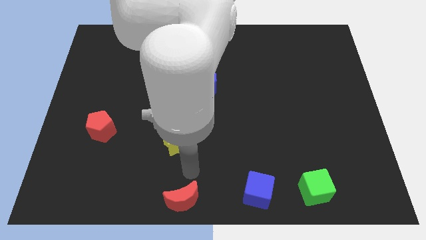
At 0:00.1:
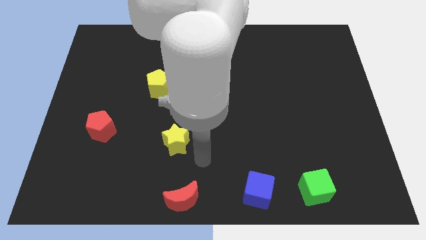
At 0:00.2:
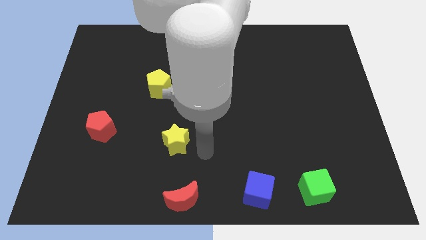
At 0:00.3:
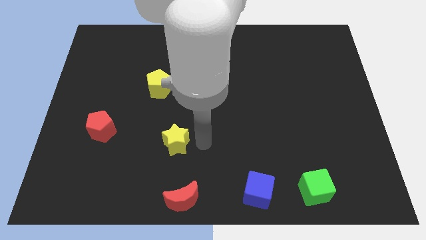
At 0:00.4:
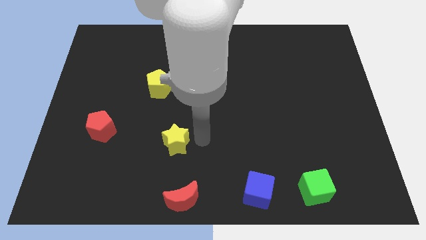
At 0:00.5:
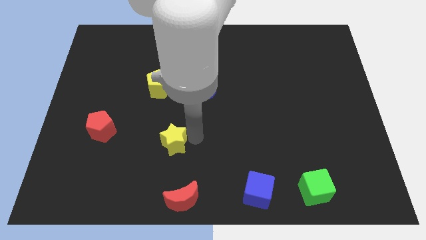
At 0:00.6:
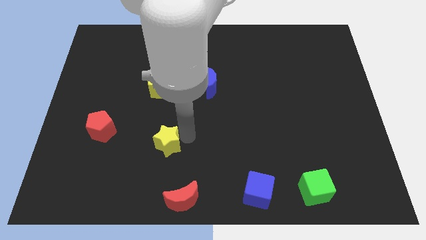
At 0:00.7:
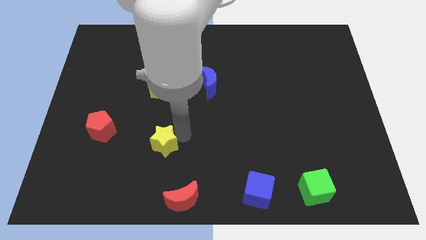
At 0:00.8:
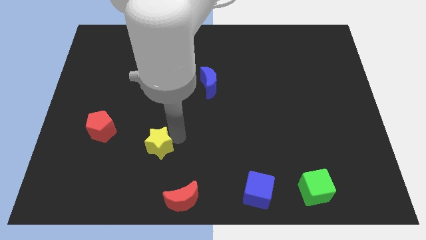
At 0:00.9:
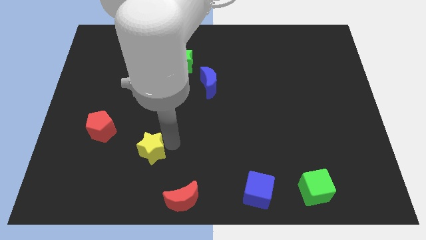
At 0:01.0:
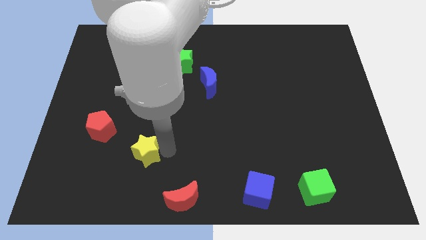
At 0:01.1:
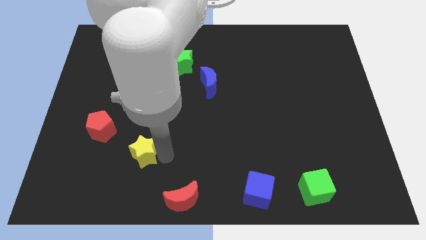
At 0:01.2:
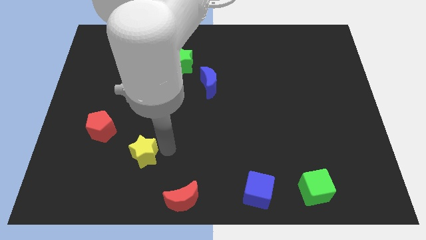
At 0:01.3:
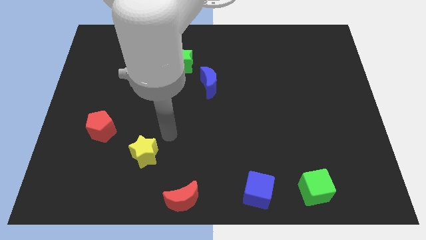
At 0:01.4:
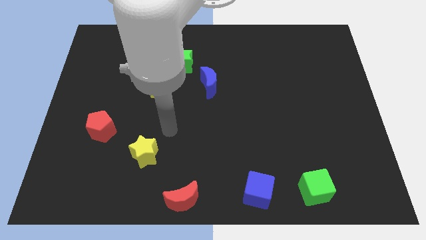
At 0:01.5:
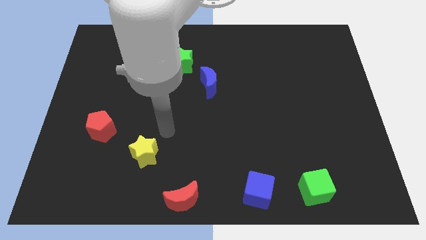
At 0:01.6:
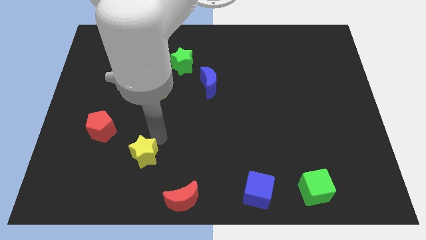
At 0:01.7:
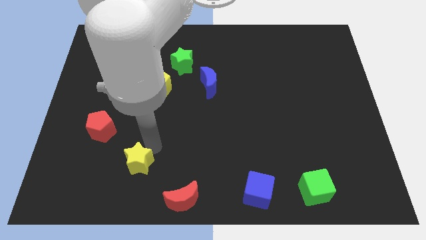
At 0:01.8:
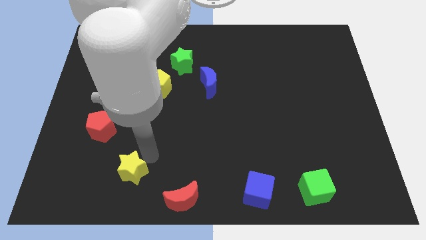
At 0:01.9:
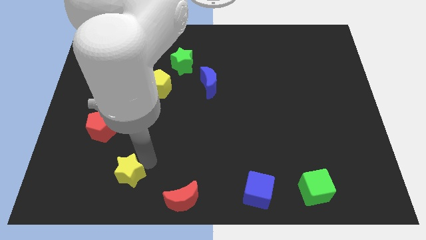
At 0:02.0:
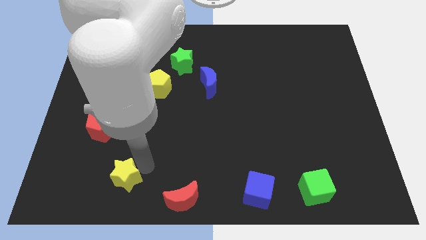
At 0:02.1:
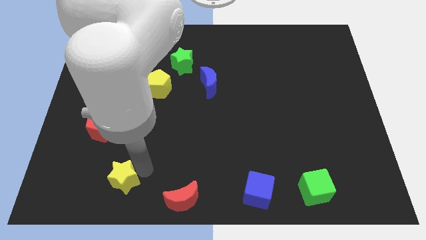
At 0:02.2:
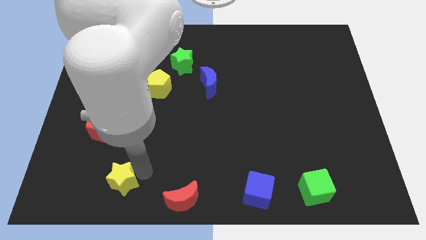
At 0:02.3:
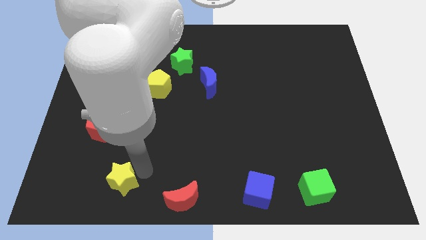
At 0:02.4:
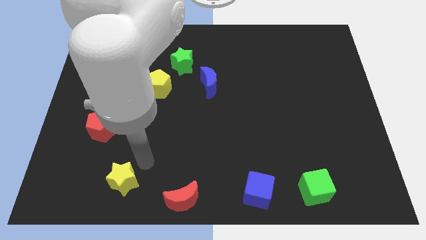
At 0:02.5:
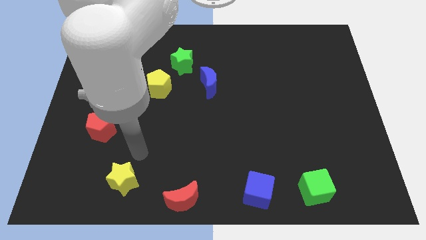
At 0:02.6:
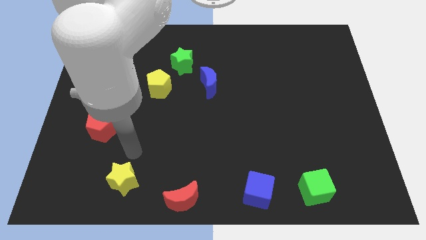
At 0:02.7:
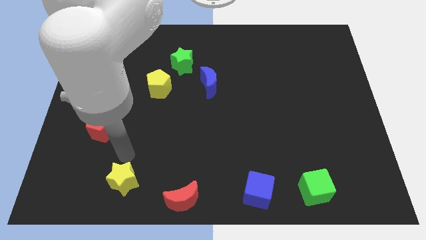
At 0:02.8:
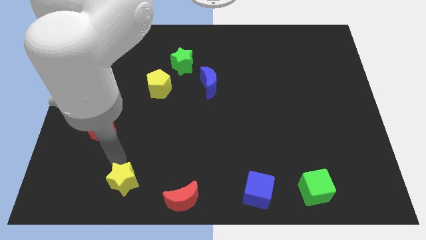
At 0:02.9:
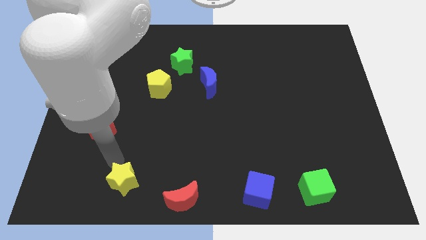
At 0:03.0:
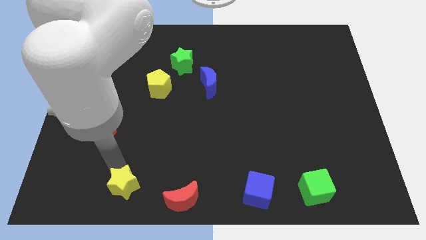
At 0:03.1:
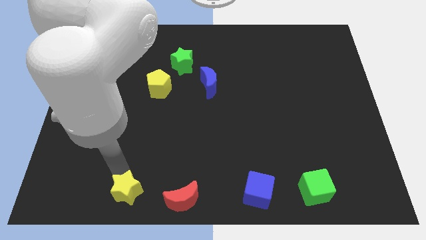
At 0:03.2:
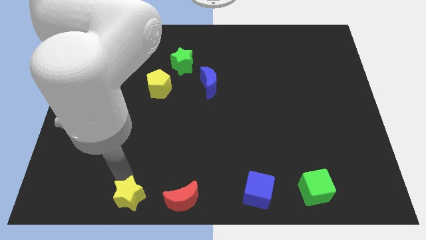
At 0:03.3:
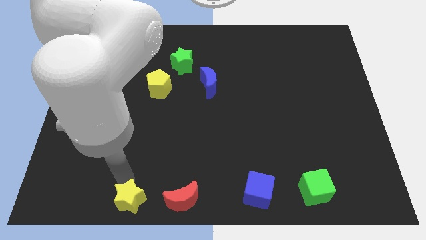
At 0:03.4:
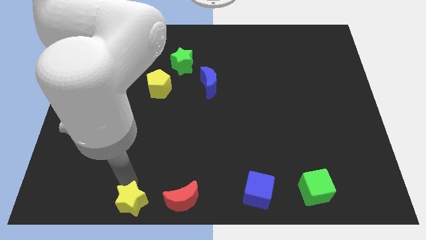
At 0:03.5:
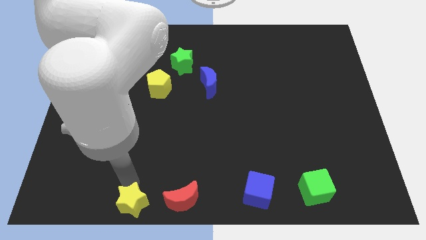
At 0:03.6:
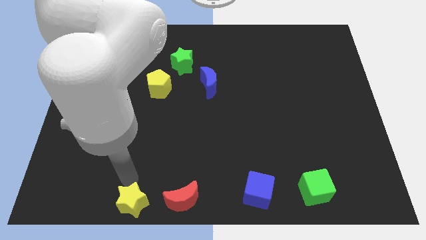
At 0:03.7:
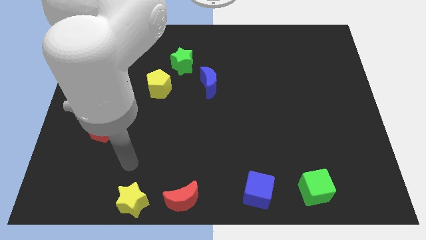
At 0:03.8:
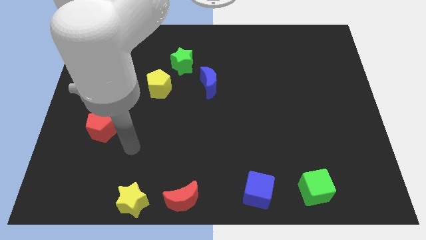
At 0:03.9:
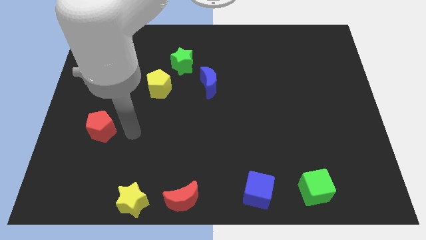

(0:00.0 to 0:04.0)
push the yellow star to the left of the red crescent

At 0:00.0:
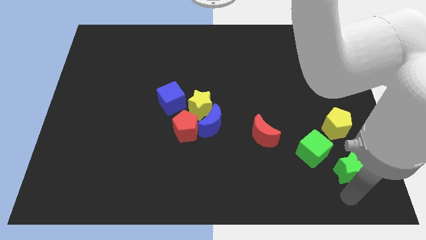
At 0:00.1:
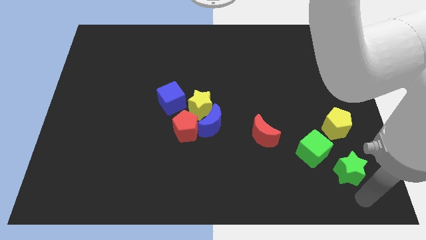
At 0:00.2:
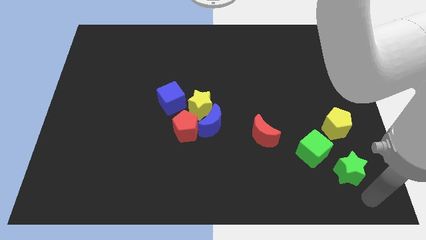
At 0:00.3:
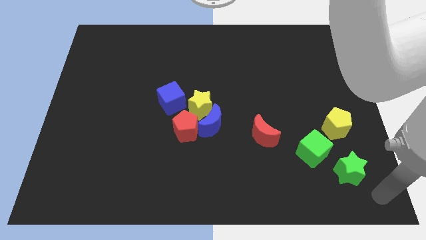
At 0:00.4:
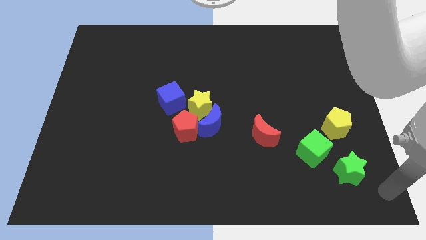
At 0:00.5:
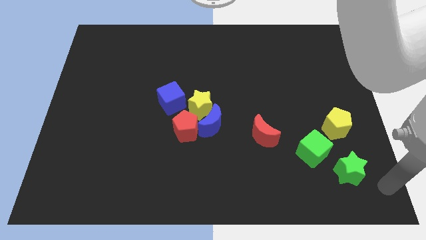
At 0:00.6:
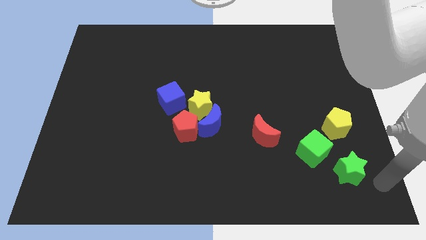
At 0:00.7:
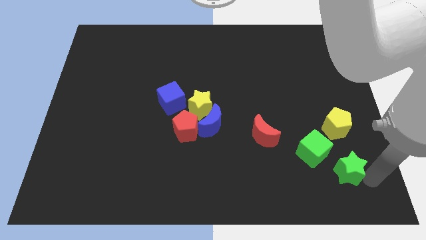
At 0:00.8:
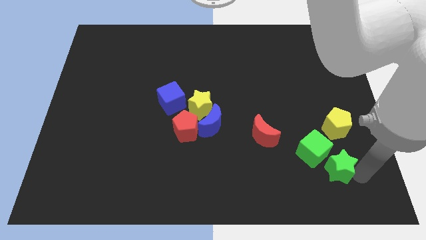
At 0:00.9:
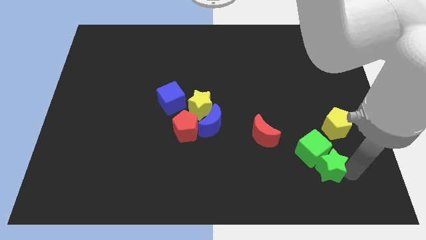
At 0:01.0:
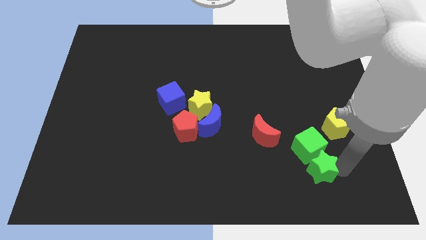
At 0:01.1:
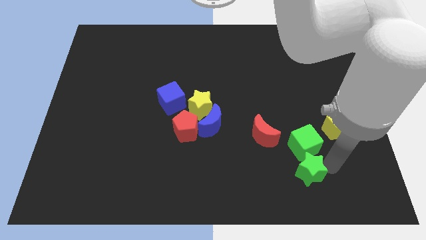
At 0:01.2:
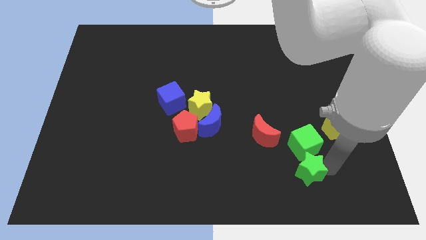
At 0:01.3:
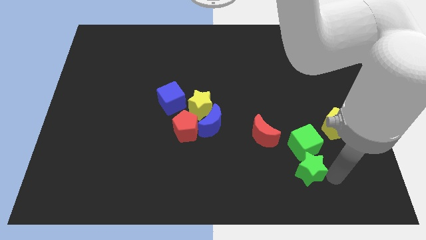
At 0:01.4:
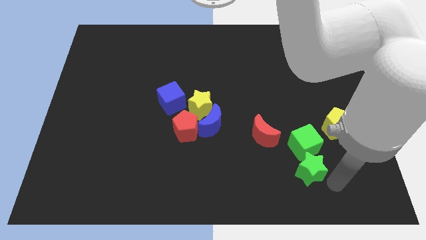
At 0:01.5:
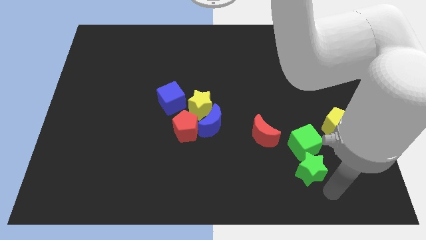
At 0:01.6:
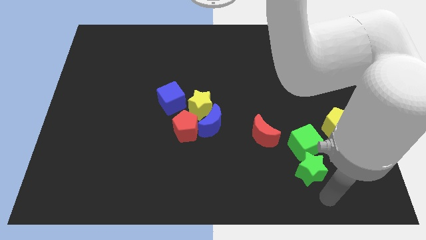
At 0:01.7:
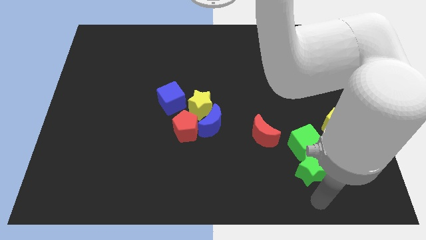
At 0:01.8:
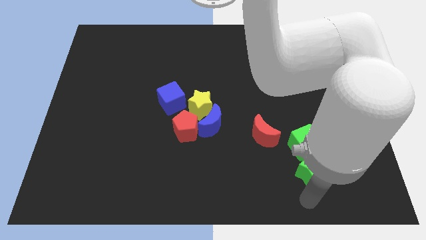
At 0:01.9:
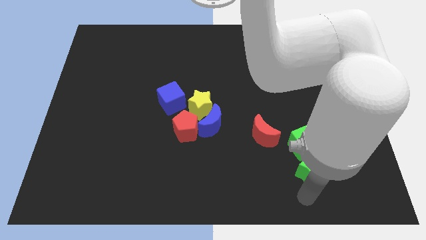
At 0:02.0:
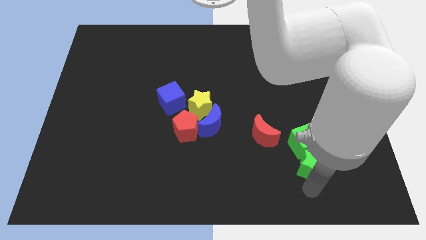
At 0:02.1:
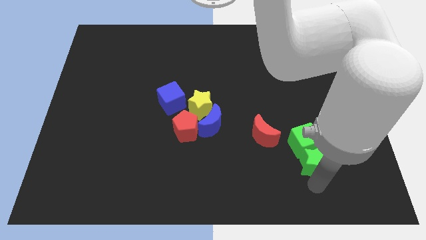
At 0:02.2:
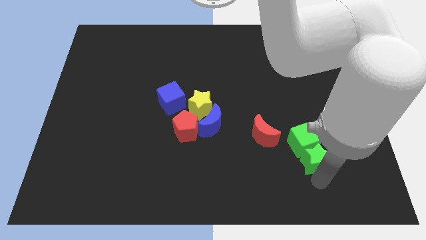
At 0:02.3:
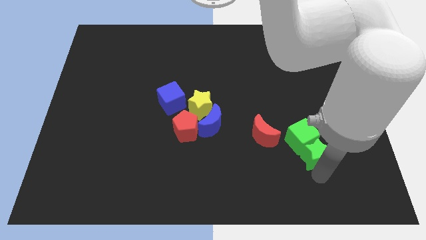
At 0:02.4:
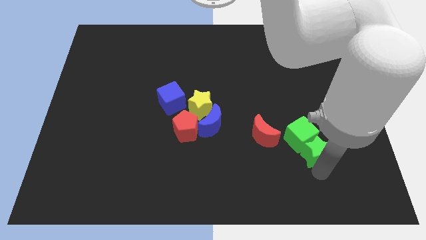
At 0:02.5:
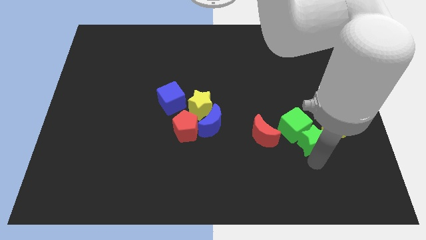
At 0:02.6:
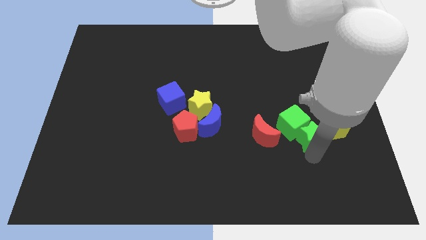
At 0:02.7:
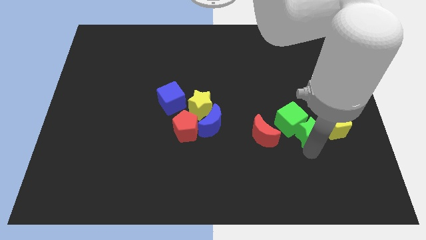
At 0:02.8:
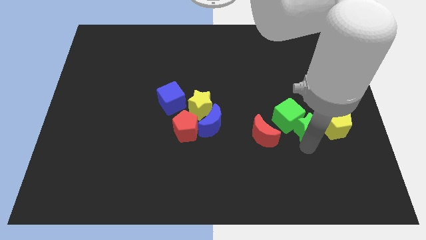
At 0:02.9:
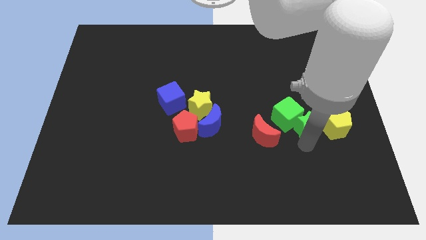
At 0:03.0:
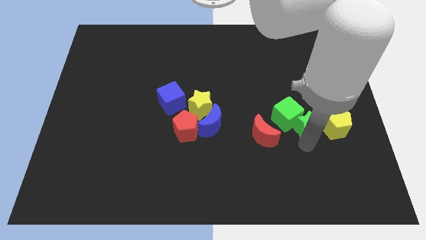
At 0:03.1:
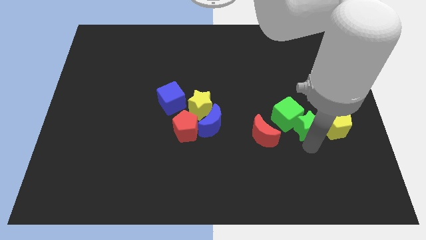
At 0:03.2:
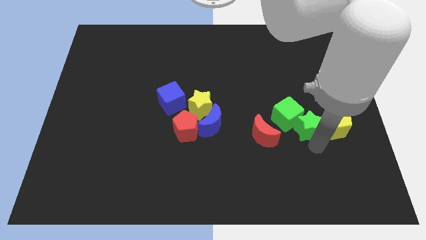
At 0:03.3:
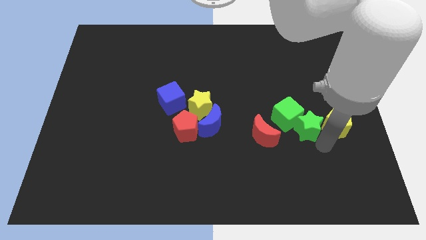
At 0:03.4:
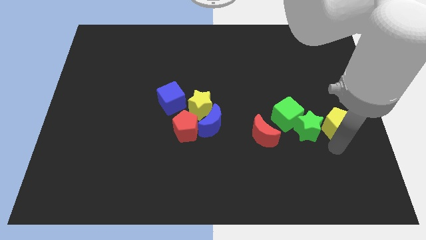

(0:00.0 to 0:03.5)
push the green cube and green star upwards of the board

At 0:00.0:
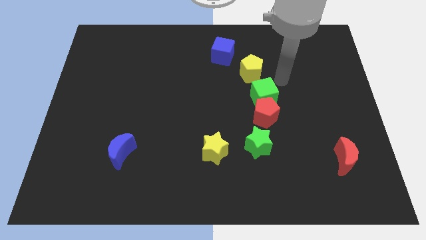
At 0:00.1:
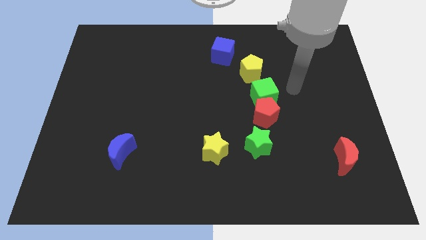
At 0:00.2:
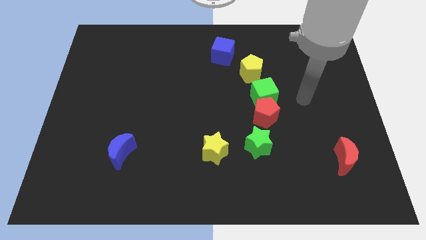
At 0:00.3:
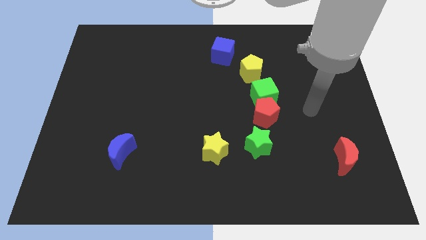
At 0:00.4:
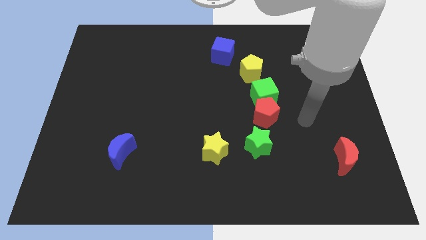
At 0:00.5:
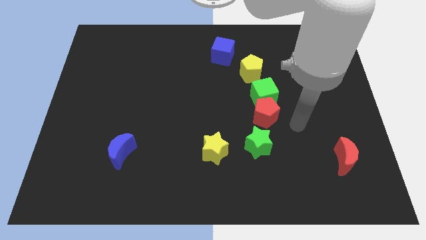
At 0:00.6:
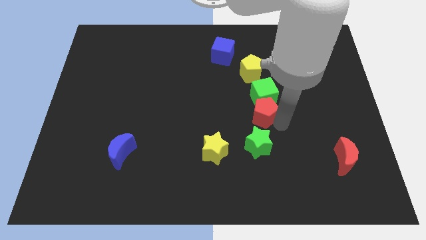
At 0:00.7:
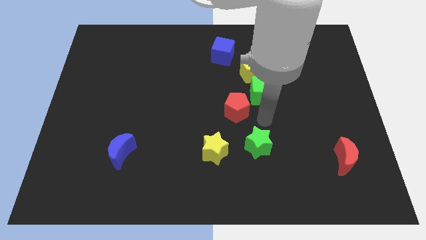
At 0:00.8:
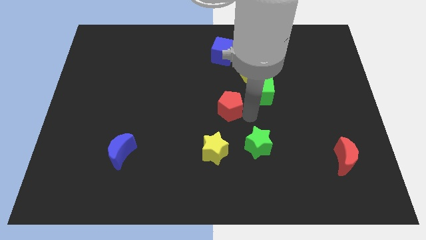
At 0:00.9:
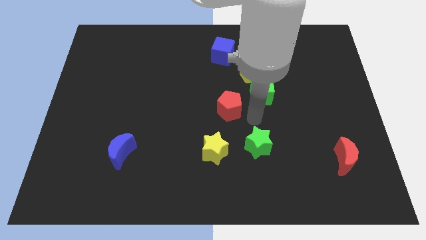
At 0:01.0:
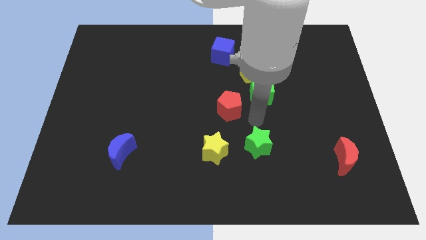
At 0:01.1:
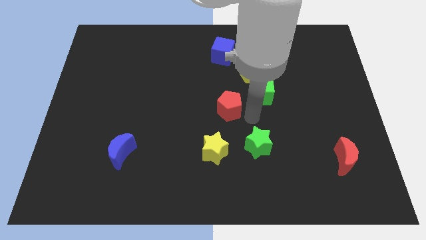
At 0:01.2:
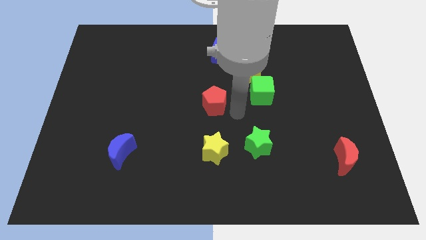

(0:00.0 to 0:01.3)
place the red pentagon above the yellow star

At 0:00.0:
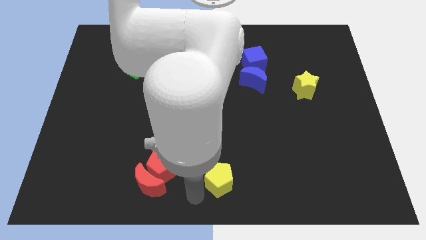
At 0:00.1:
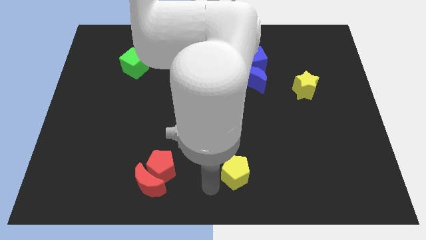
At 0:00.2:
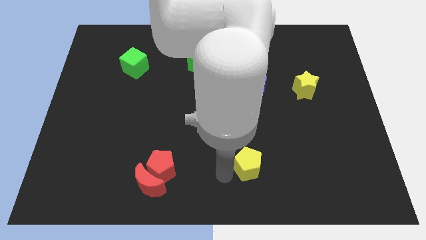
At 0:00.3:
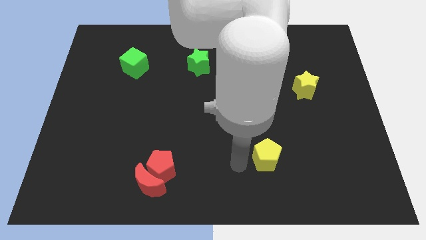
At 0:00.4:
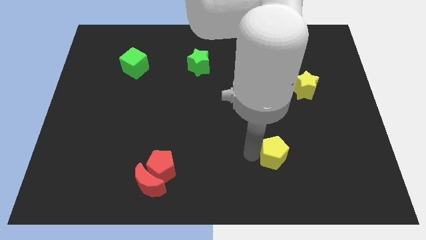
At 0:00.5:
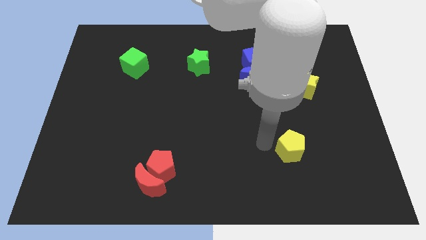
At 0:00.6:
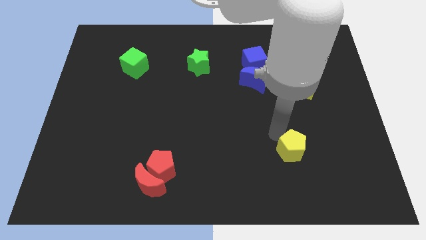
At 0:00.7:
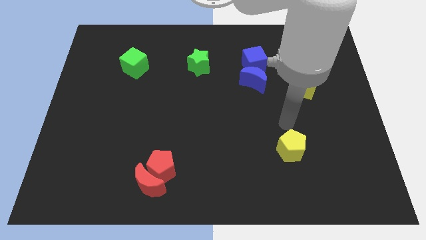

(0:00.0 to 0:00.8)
move the yellow pentagon diagonally to the blue moon
